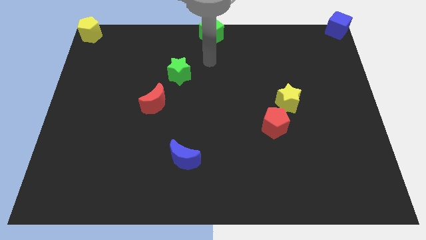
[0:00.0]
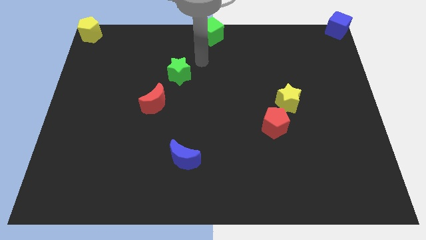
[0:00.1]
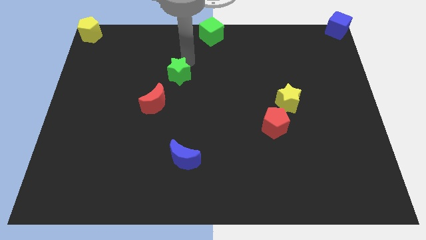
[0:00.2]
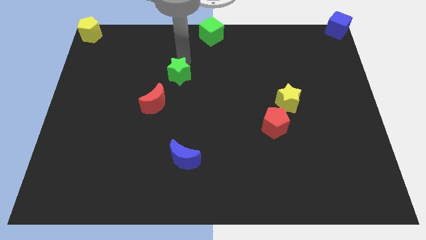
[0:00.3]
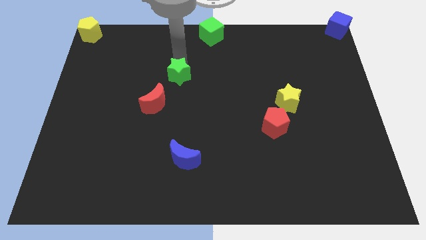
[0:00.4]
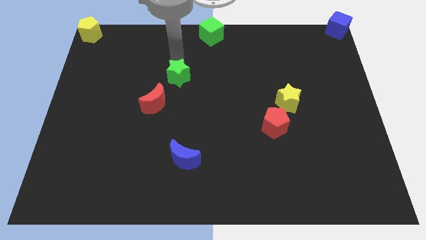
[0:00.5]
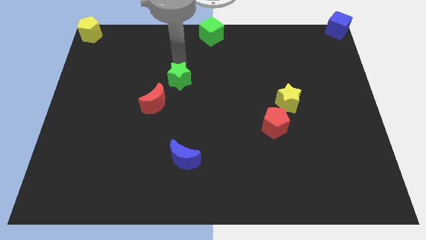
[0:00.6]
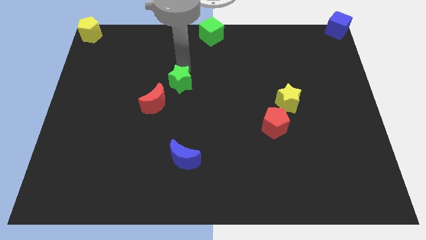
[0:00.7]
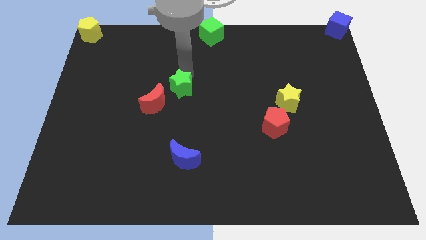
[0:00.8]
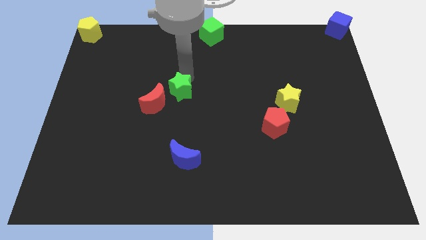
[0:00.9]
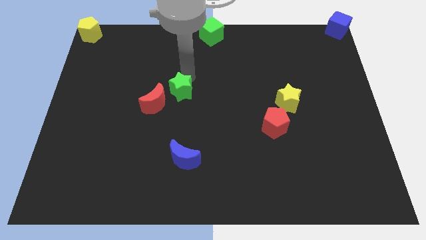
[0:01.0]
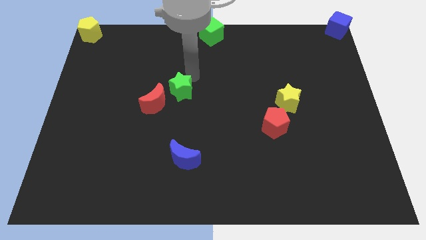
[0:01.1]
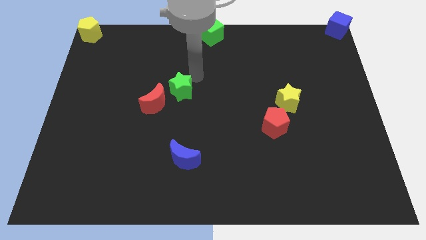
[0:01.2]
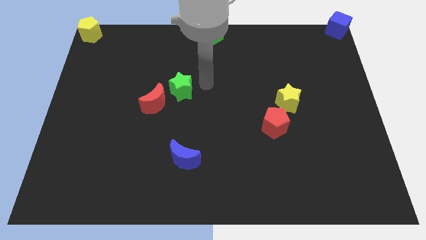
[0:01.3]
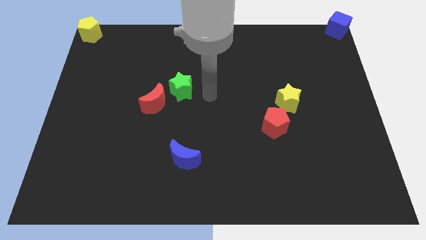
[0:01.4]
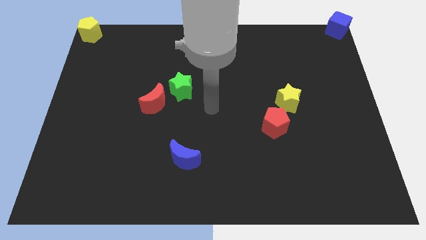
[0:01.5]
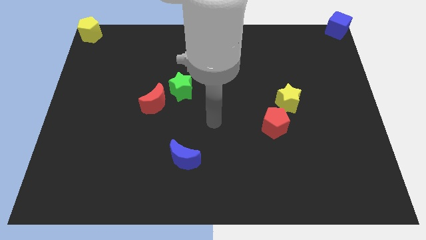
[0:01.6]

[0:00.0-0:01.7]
push the green star at the top right side of the red moon

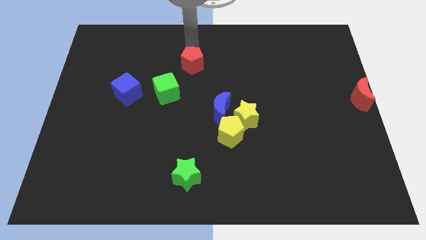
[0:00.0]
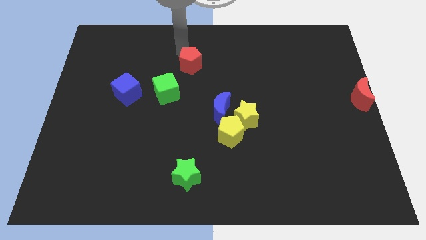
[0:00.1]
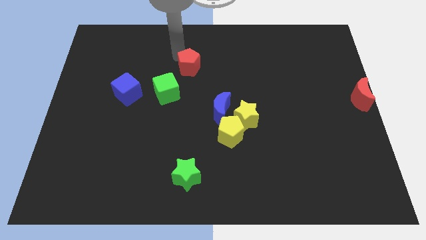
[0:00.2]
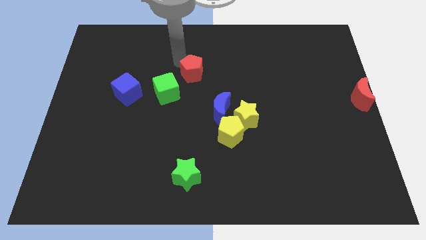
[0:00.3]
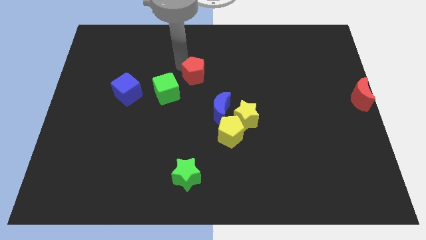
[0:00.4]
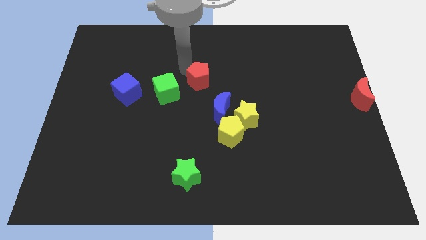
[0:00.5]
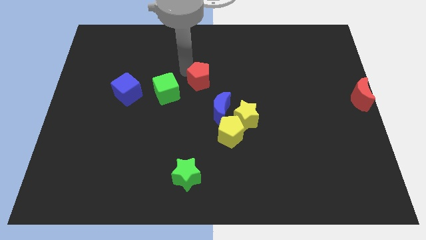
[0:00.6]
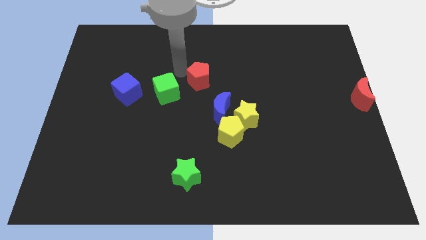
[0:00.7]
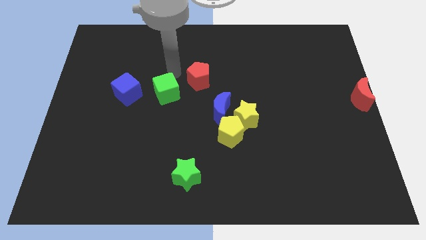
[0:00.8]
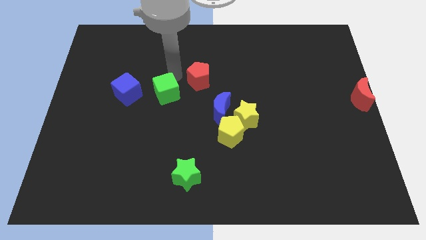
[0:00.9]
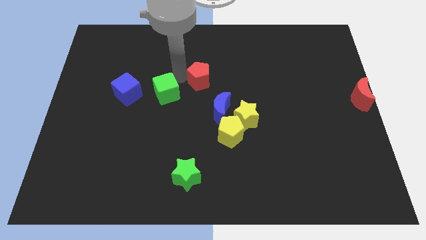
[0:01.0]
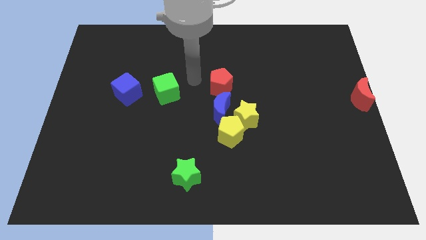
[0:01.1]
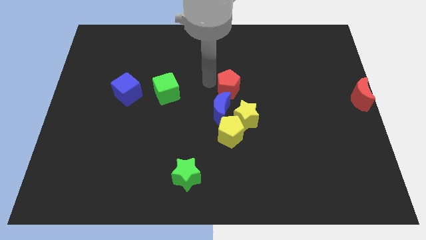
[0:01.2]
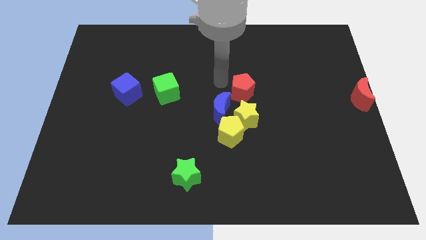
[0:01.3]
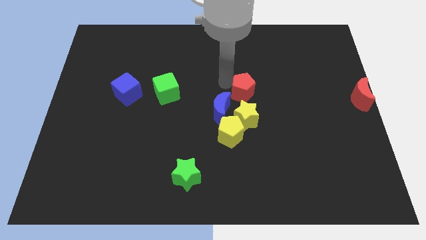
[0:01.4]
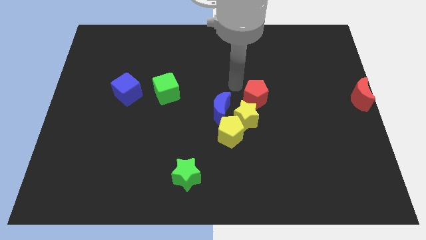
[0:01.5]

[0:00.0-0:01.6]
push the red pentagon to the top right of the yellow star

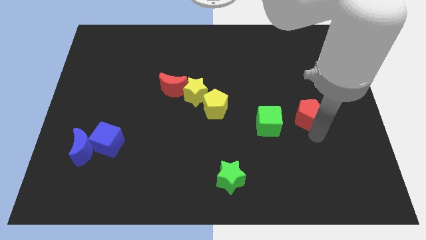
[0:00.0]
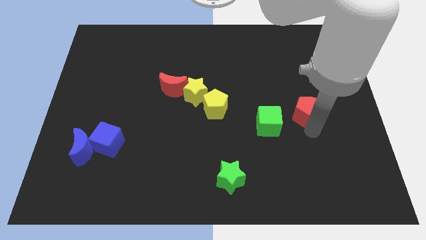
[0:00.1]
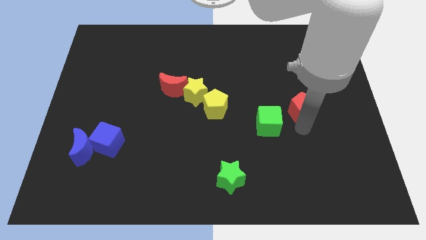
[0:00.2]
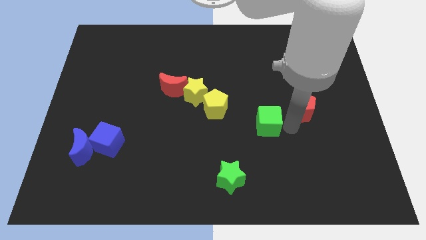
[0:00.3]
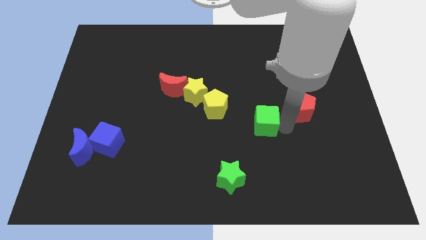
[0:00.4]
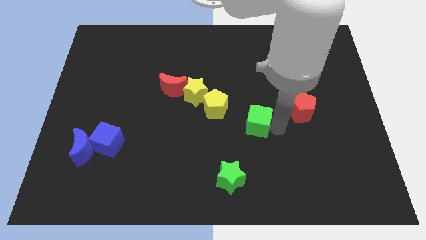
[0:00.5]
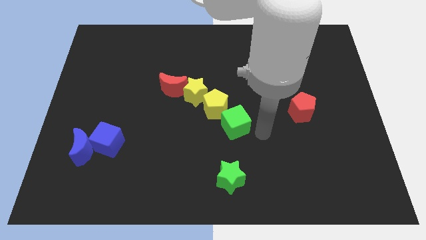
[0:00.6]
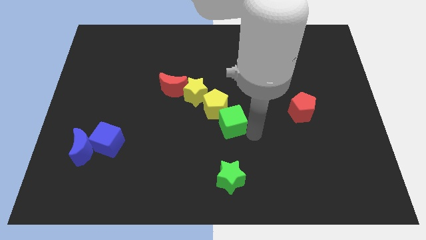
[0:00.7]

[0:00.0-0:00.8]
push green cube above green star

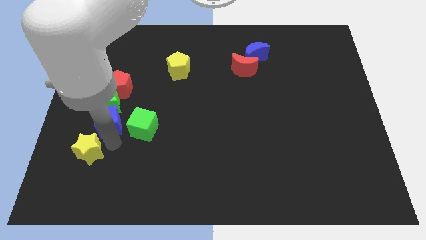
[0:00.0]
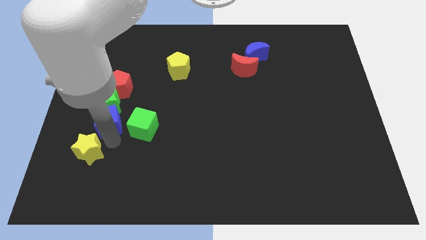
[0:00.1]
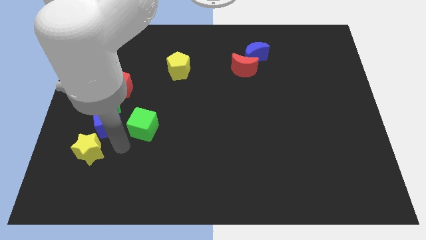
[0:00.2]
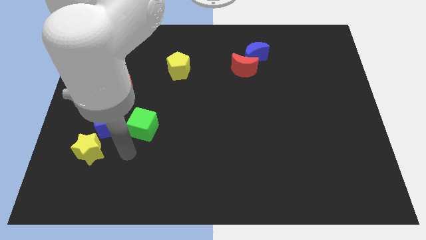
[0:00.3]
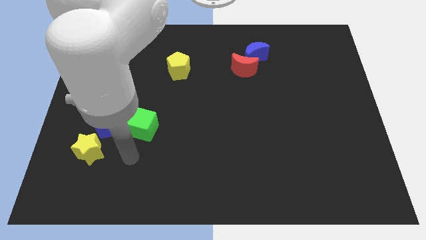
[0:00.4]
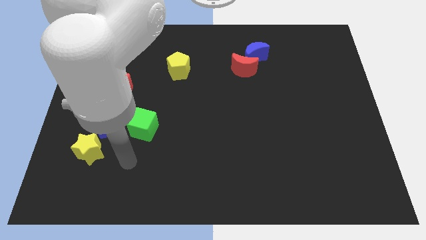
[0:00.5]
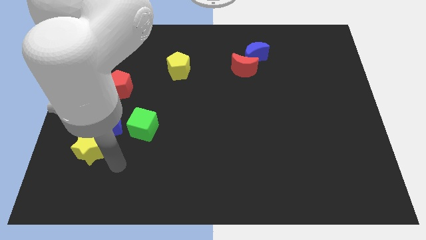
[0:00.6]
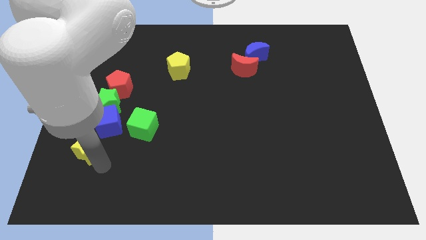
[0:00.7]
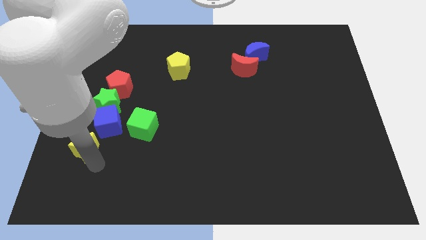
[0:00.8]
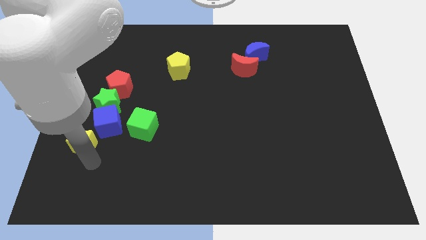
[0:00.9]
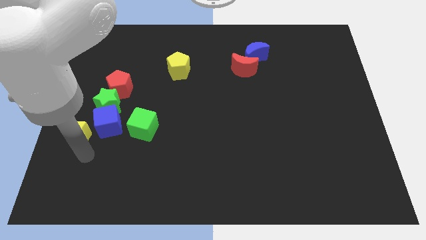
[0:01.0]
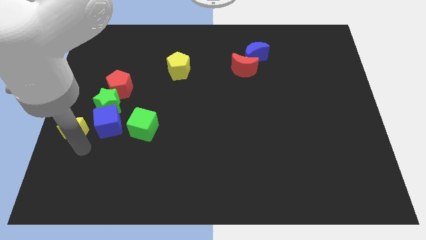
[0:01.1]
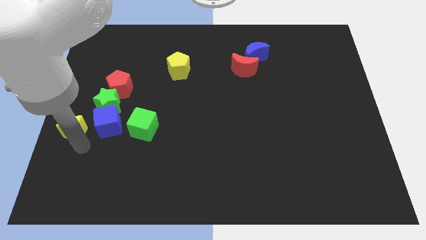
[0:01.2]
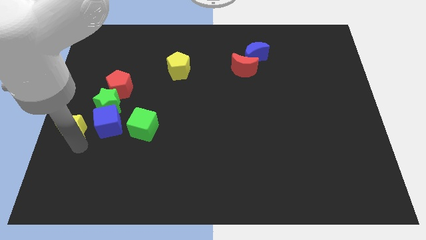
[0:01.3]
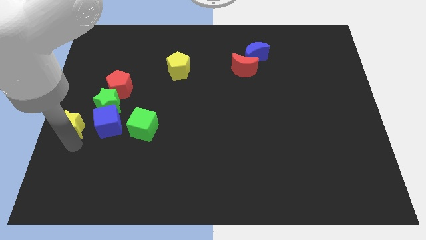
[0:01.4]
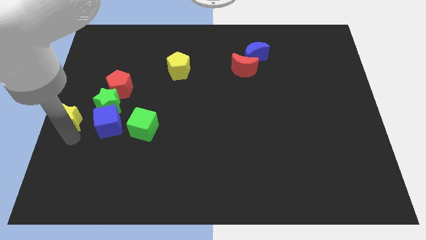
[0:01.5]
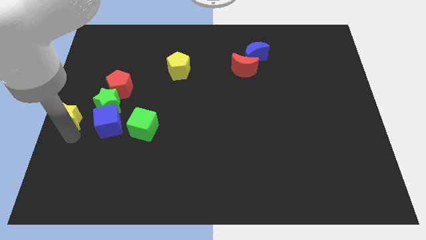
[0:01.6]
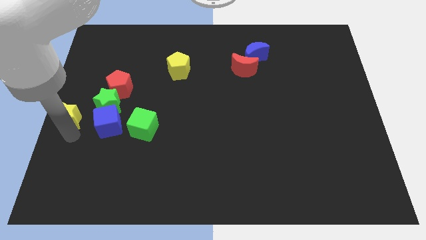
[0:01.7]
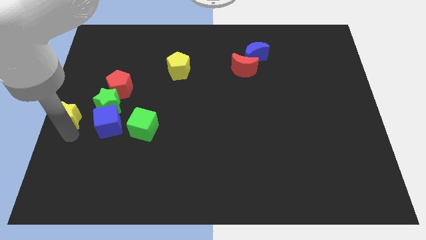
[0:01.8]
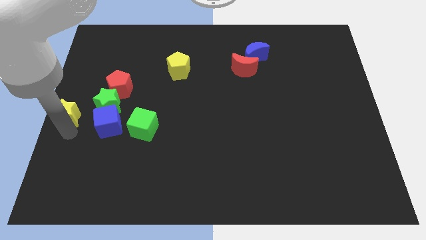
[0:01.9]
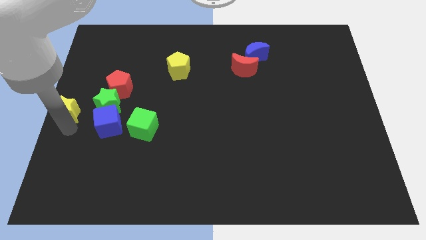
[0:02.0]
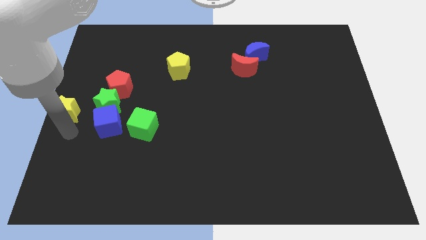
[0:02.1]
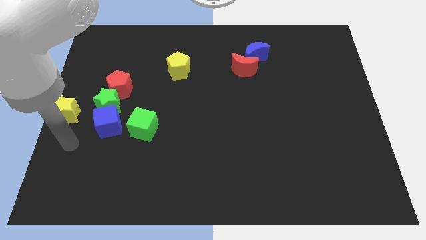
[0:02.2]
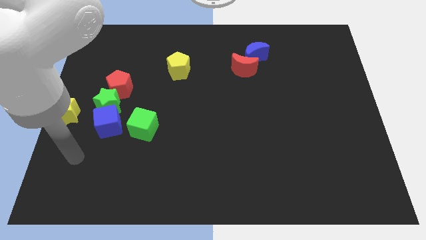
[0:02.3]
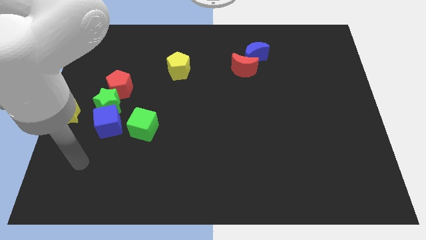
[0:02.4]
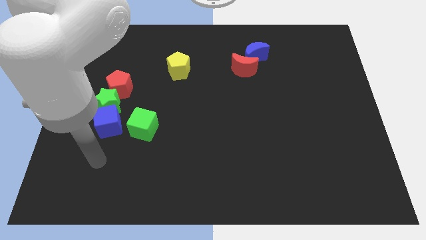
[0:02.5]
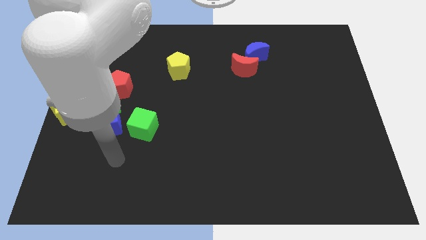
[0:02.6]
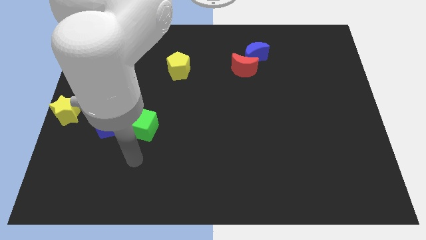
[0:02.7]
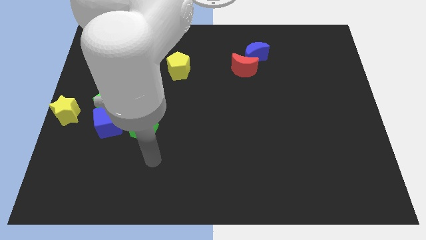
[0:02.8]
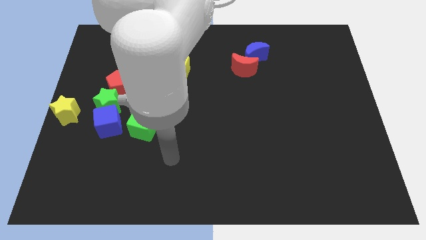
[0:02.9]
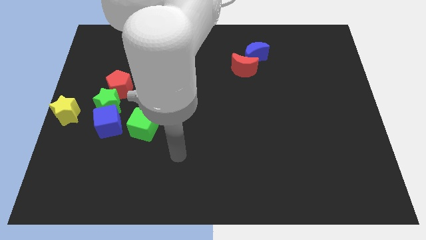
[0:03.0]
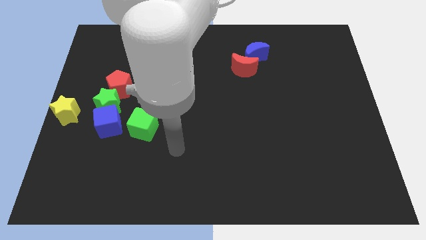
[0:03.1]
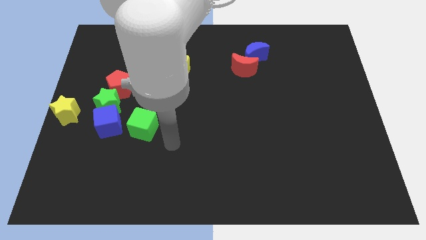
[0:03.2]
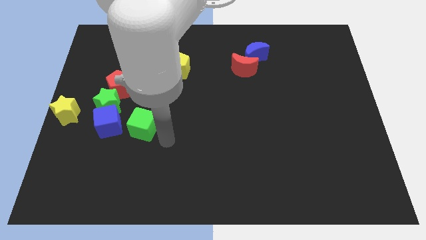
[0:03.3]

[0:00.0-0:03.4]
push the yellow star to the center left side of the board

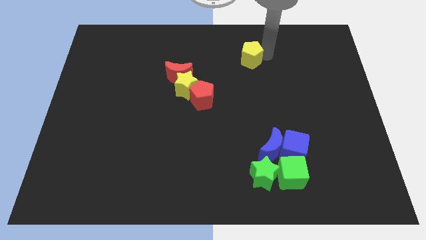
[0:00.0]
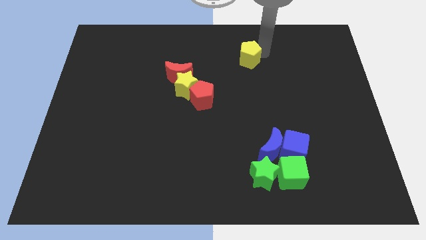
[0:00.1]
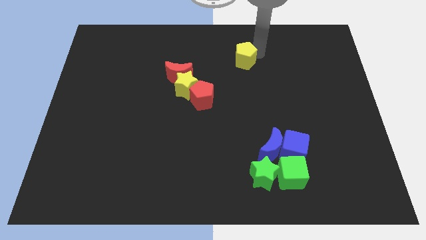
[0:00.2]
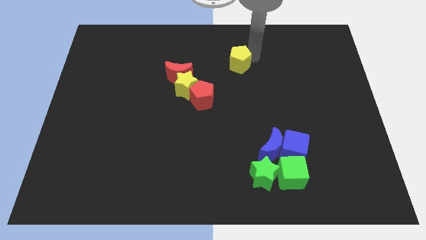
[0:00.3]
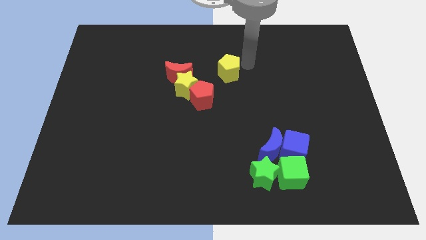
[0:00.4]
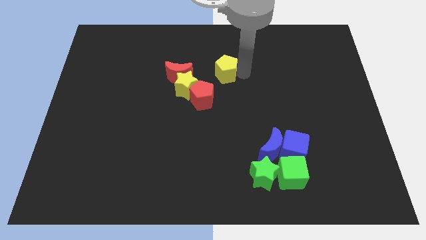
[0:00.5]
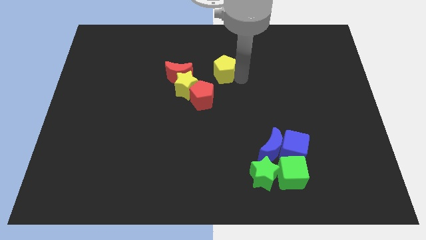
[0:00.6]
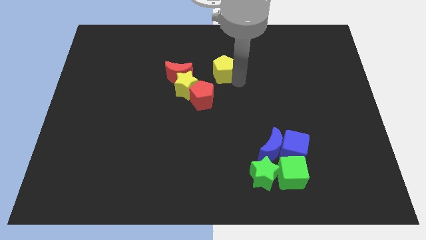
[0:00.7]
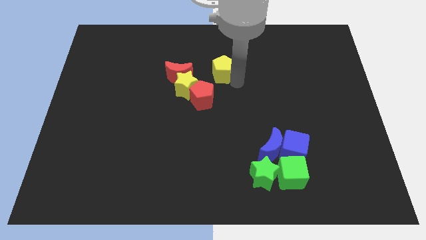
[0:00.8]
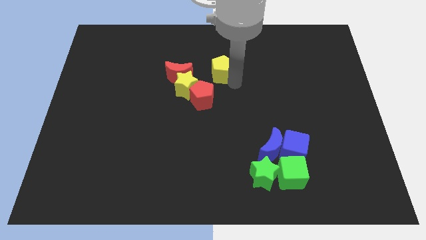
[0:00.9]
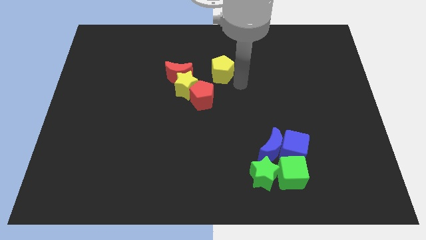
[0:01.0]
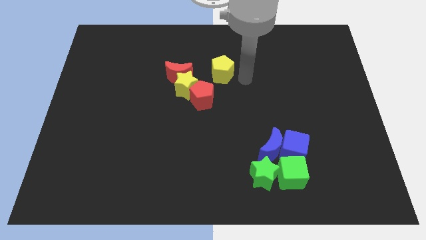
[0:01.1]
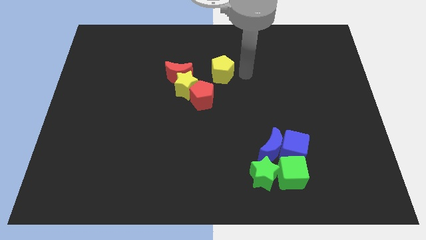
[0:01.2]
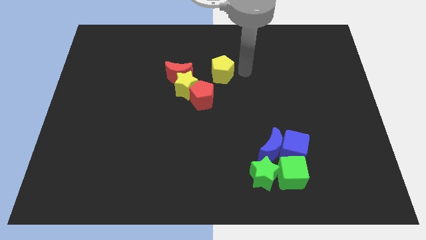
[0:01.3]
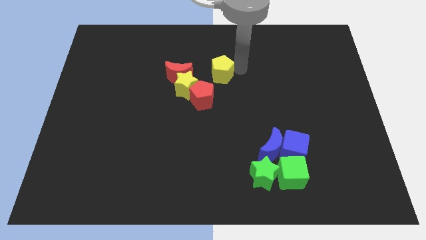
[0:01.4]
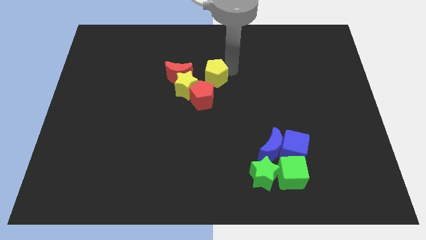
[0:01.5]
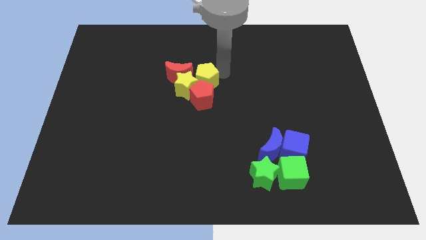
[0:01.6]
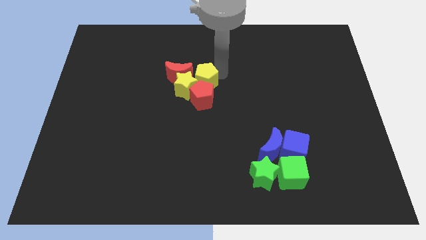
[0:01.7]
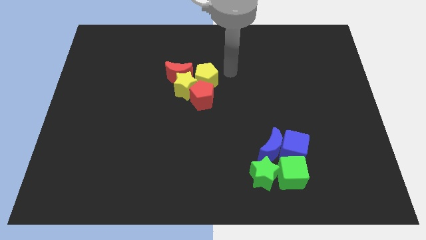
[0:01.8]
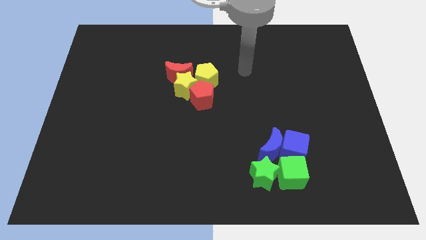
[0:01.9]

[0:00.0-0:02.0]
place the yellow pentagon top right to the yellow star
